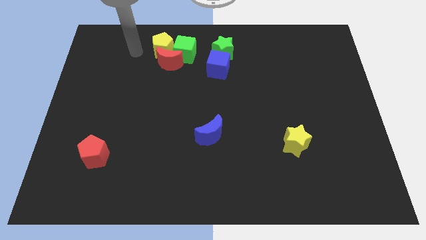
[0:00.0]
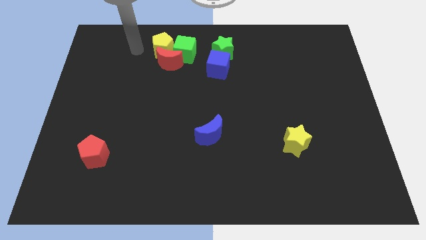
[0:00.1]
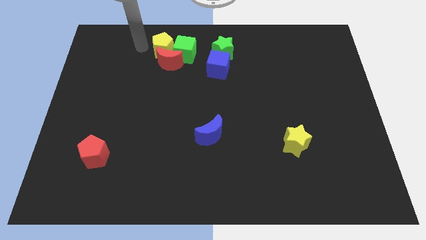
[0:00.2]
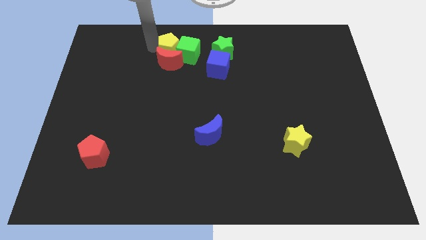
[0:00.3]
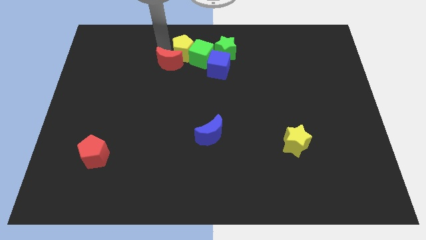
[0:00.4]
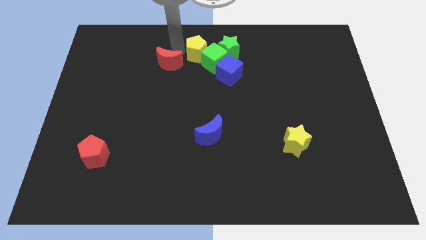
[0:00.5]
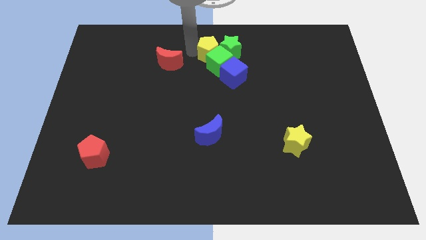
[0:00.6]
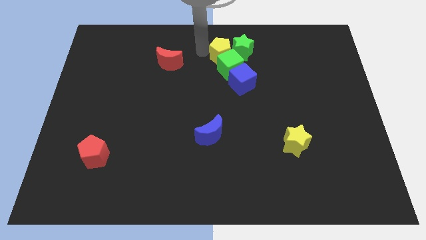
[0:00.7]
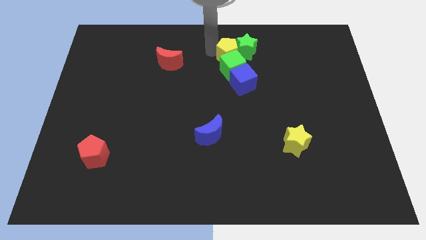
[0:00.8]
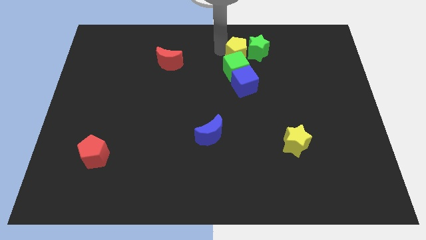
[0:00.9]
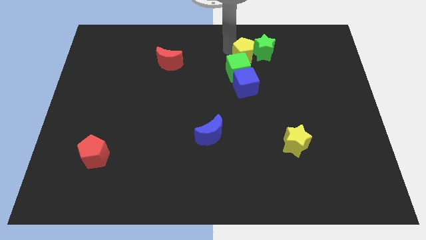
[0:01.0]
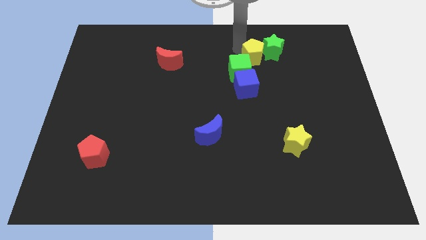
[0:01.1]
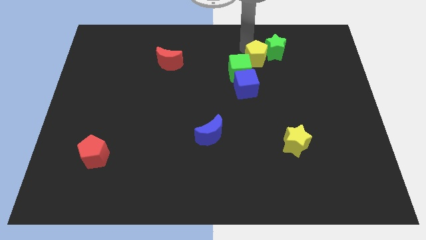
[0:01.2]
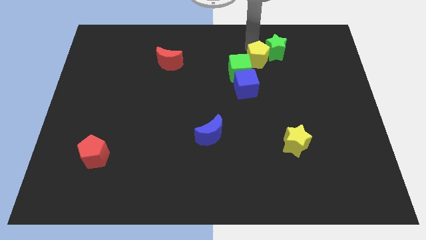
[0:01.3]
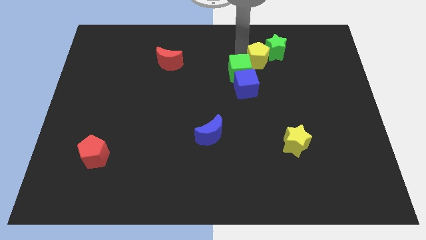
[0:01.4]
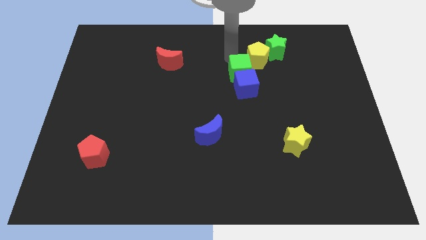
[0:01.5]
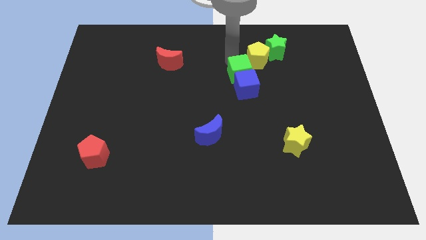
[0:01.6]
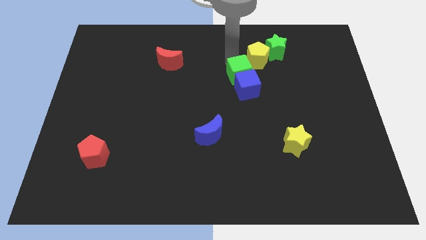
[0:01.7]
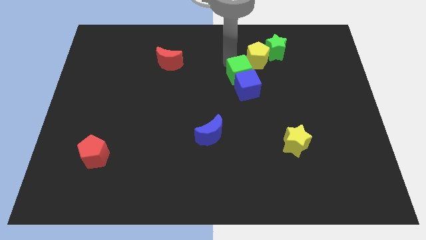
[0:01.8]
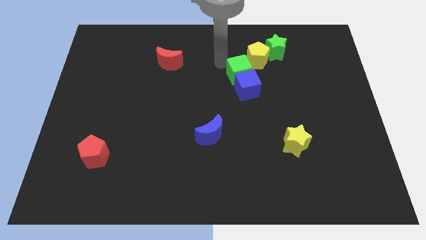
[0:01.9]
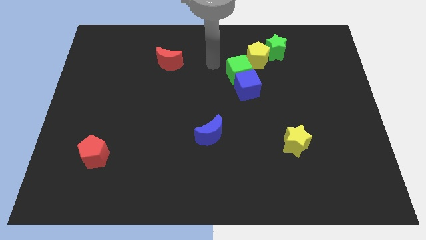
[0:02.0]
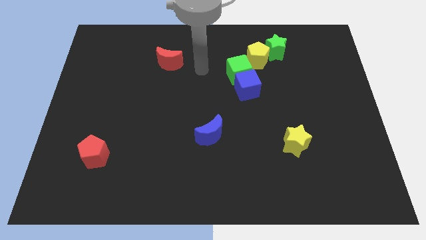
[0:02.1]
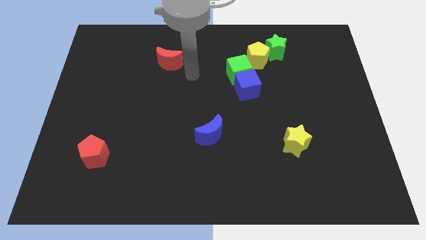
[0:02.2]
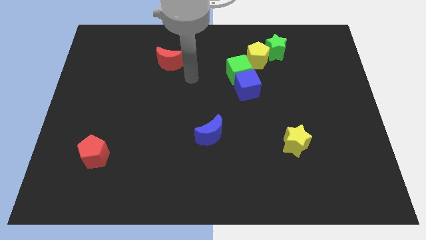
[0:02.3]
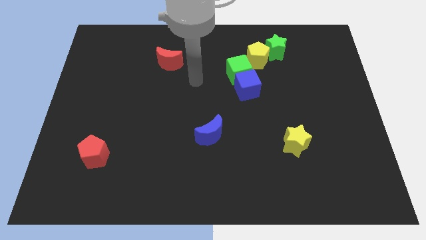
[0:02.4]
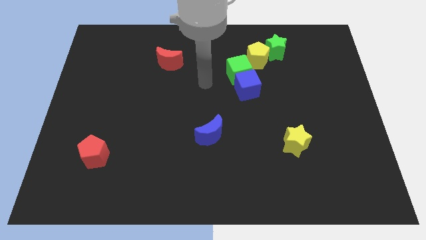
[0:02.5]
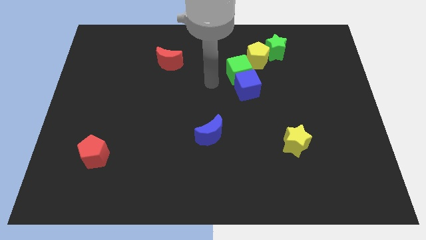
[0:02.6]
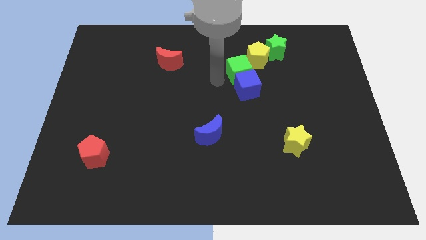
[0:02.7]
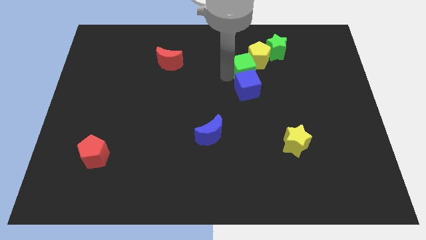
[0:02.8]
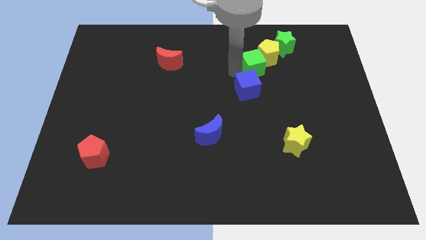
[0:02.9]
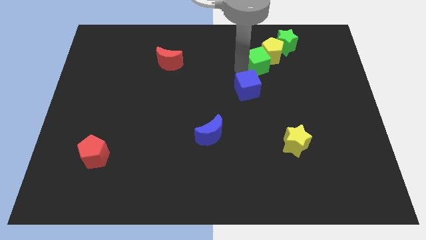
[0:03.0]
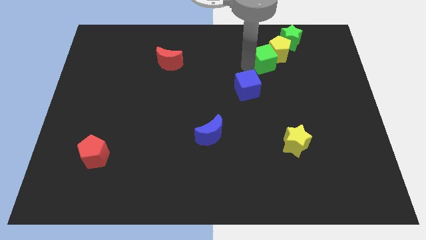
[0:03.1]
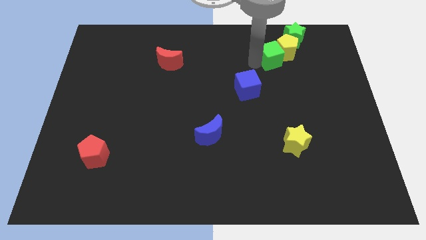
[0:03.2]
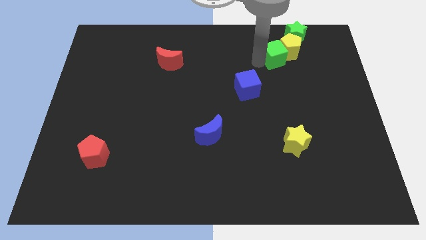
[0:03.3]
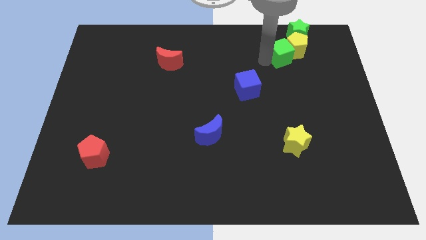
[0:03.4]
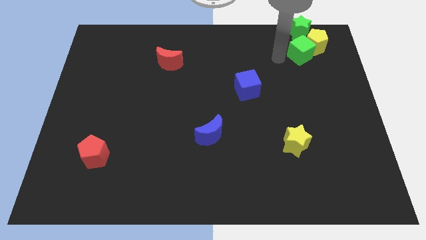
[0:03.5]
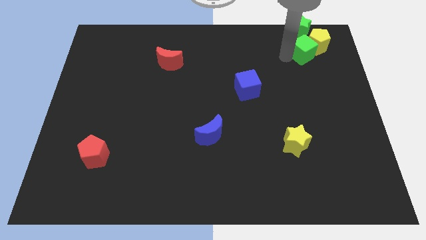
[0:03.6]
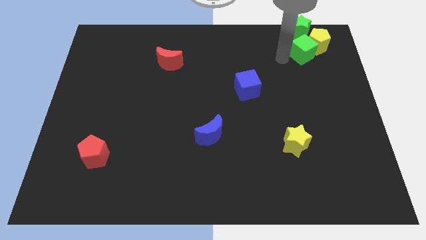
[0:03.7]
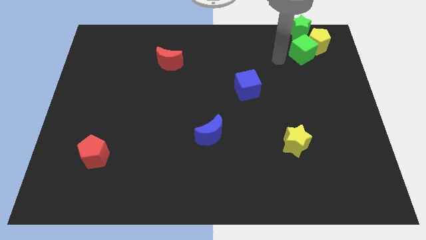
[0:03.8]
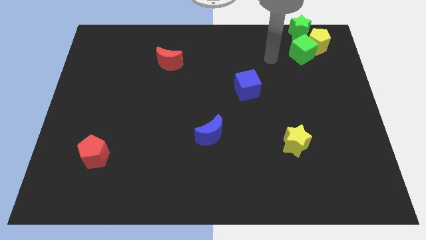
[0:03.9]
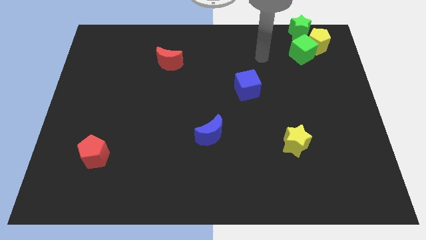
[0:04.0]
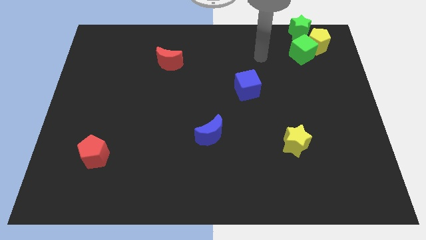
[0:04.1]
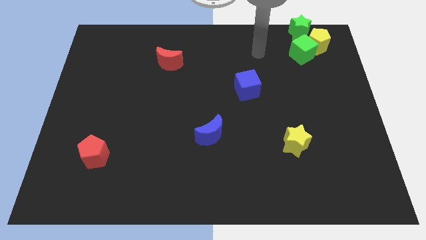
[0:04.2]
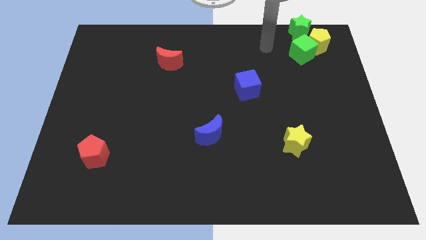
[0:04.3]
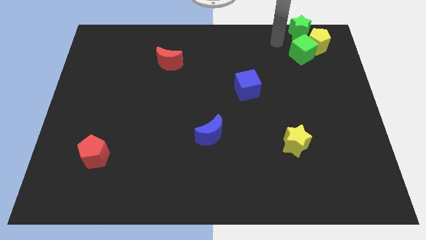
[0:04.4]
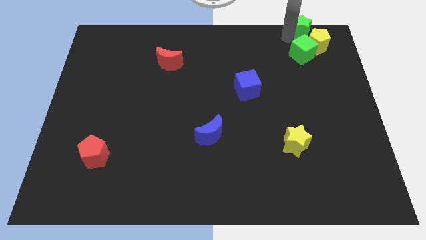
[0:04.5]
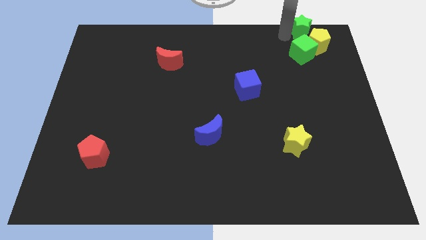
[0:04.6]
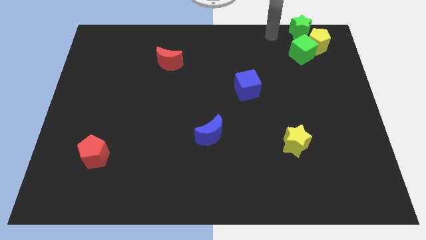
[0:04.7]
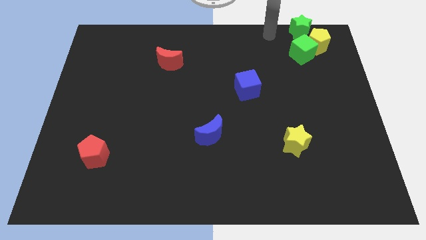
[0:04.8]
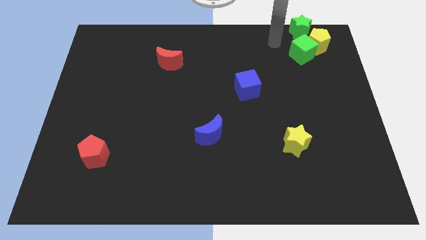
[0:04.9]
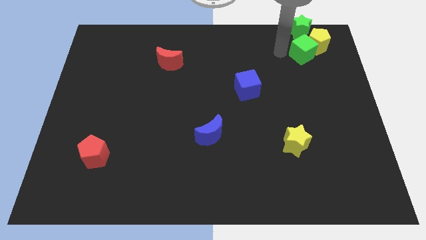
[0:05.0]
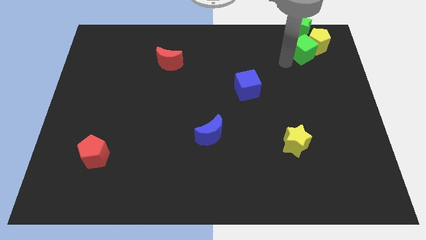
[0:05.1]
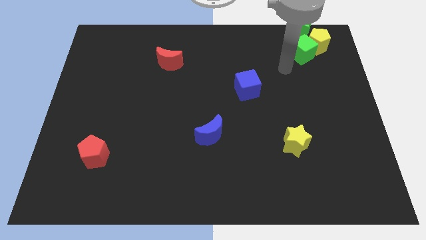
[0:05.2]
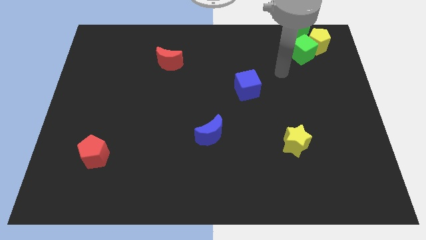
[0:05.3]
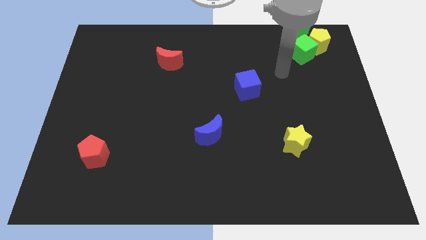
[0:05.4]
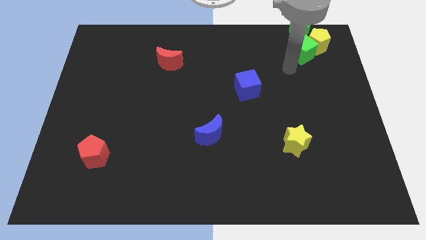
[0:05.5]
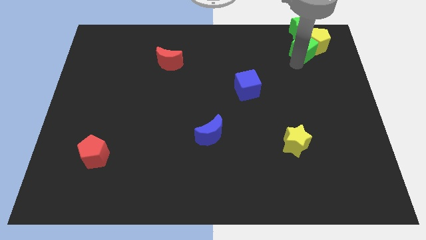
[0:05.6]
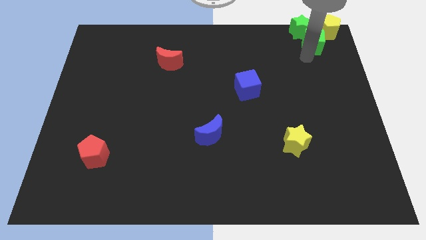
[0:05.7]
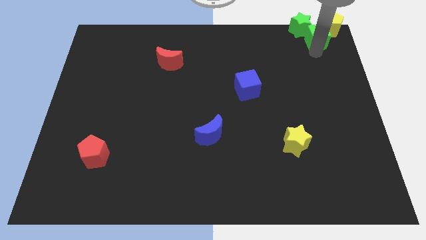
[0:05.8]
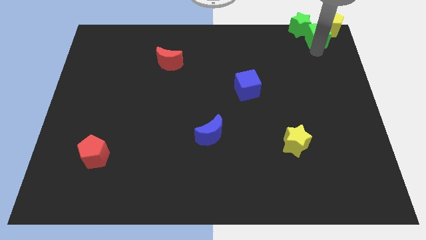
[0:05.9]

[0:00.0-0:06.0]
move the yellow pentagon with green blocks towards top right corner

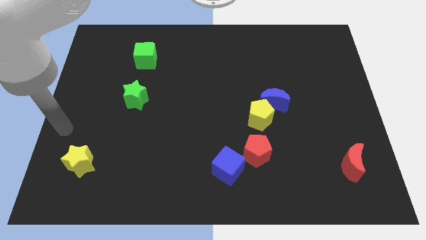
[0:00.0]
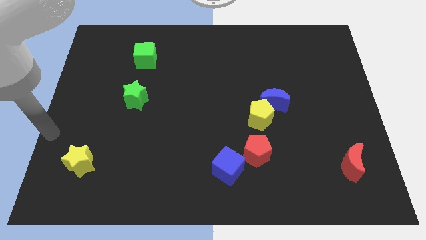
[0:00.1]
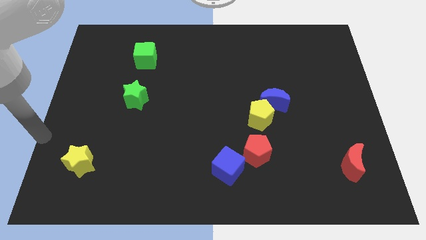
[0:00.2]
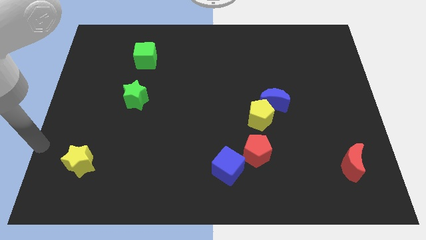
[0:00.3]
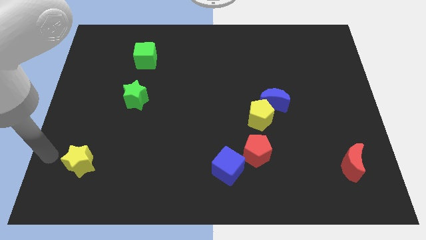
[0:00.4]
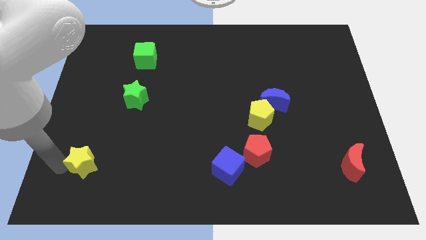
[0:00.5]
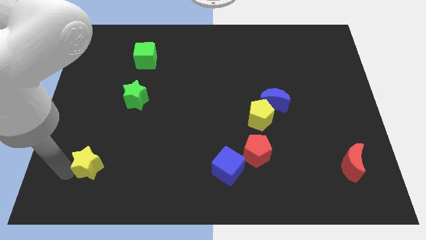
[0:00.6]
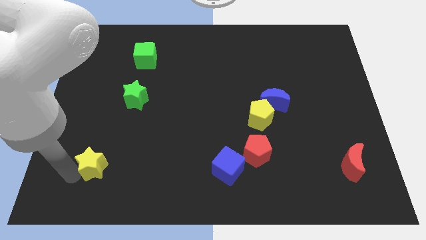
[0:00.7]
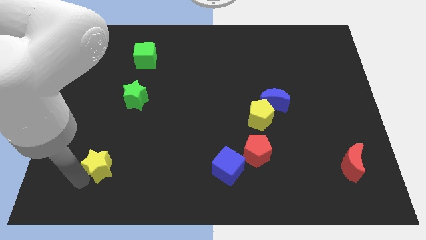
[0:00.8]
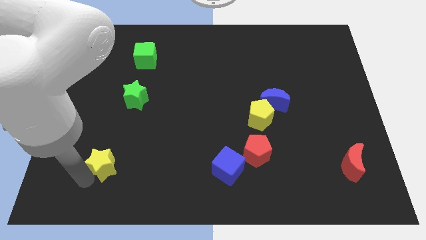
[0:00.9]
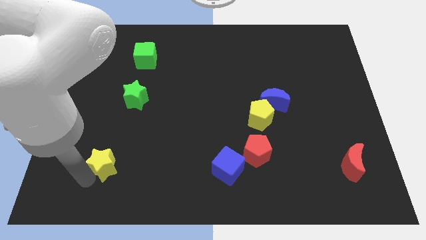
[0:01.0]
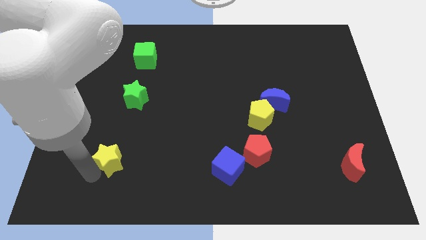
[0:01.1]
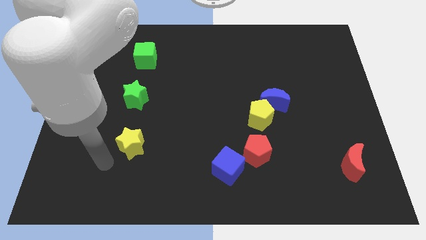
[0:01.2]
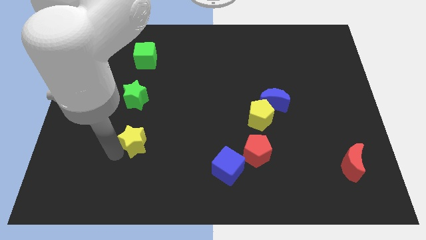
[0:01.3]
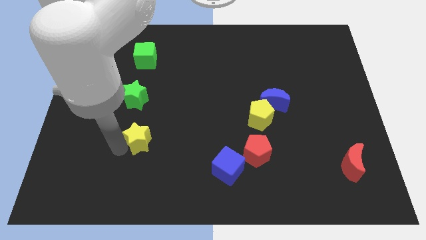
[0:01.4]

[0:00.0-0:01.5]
slide yellow star to the bottom of green star

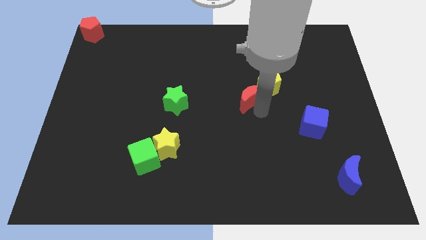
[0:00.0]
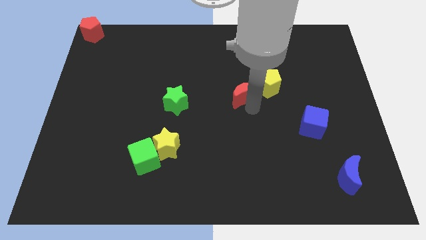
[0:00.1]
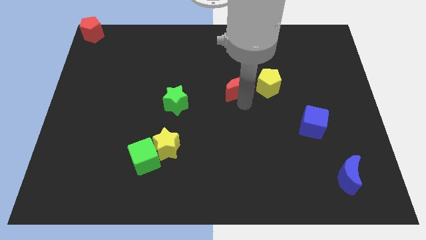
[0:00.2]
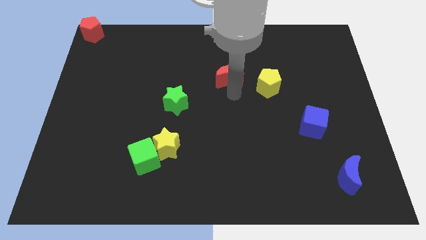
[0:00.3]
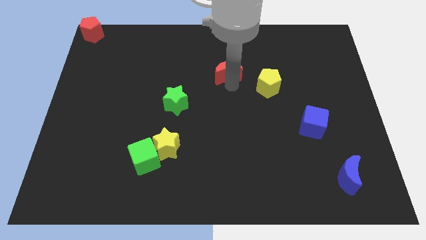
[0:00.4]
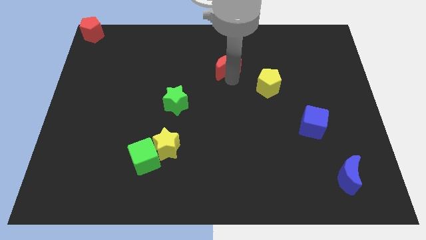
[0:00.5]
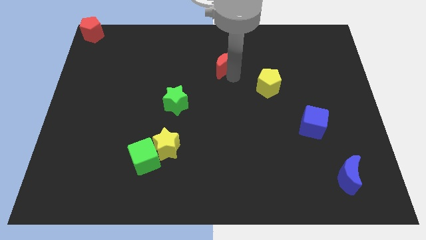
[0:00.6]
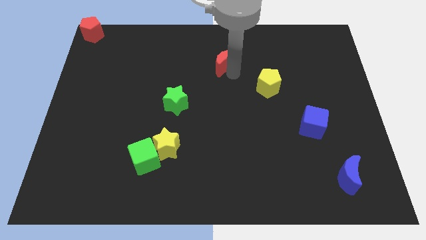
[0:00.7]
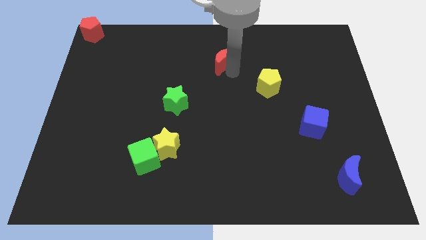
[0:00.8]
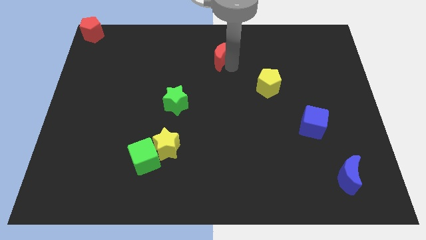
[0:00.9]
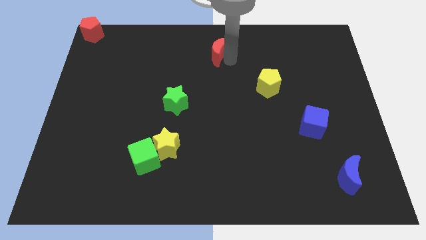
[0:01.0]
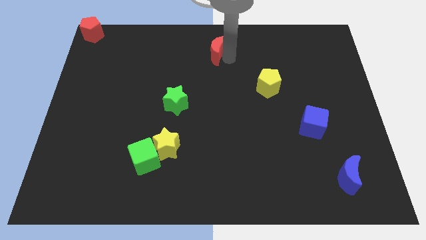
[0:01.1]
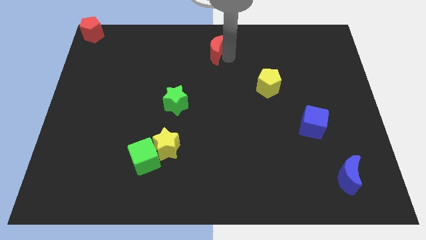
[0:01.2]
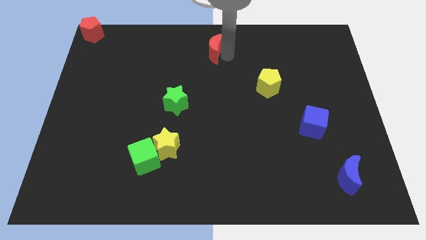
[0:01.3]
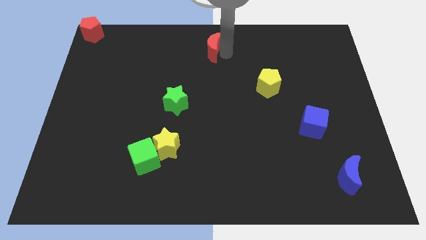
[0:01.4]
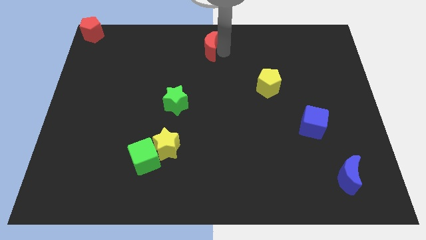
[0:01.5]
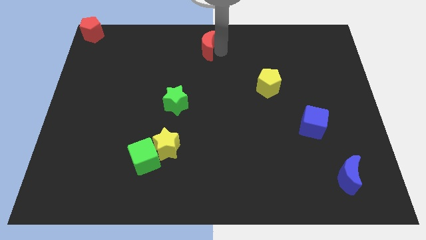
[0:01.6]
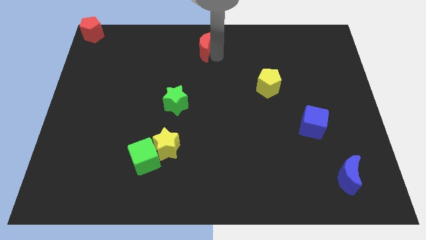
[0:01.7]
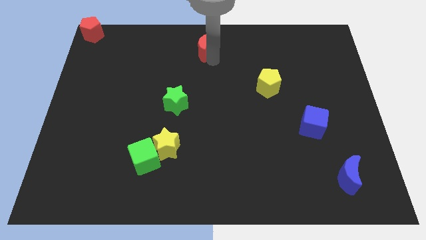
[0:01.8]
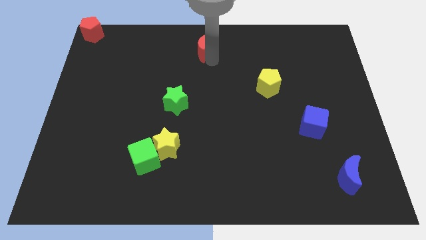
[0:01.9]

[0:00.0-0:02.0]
move red moon to the top center of the board
